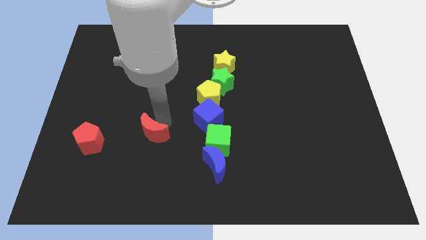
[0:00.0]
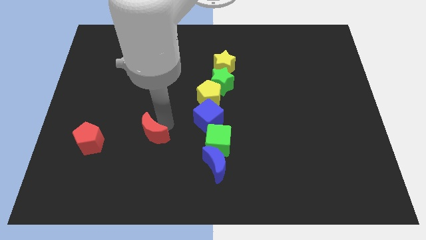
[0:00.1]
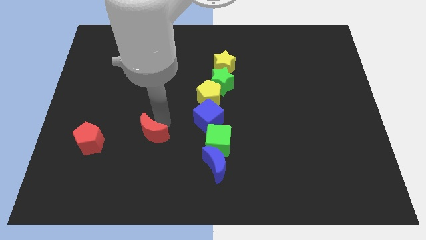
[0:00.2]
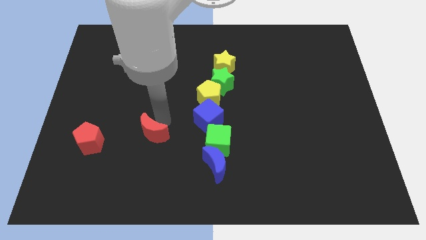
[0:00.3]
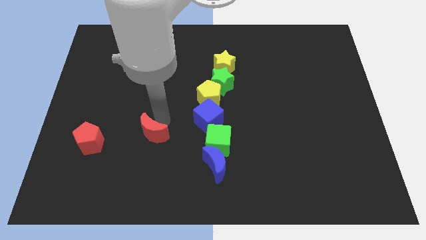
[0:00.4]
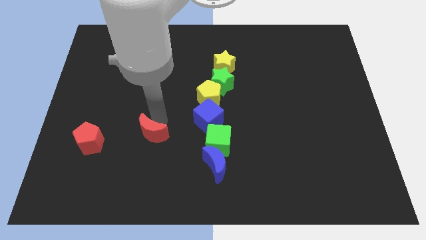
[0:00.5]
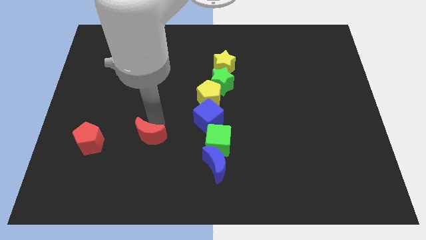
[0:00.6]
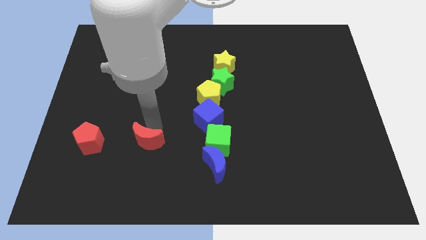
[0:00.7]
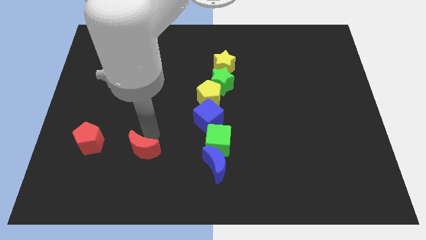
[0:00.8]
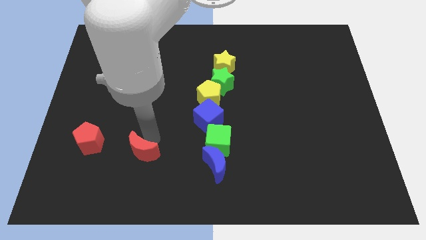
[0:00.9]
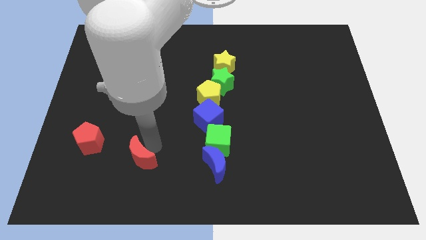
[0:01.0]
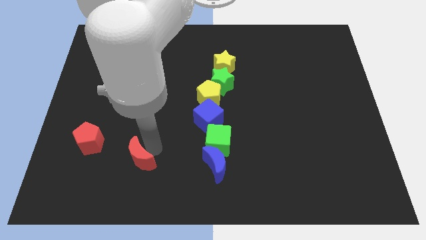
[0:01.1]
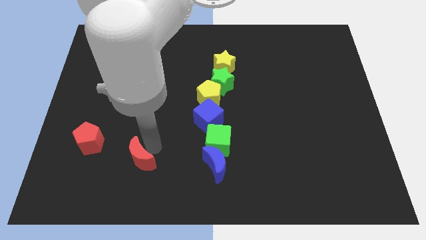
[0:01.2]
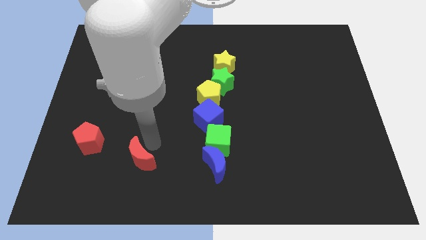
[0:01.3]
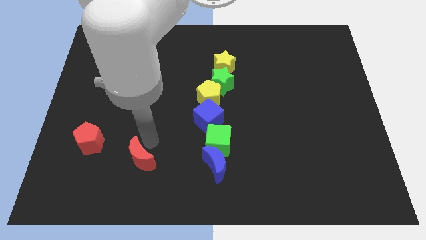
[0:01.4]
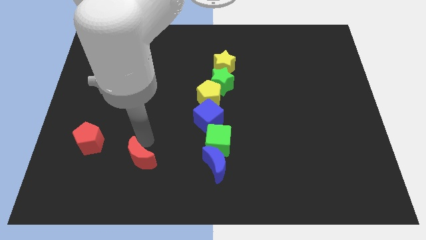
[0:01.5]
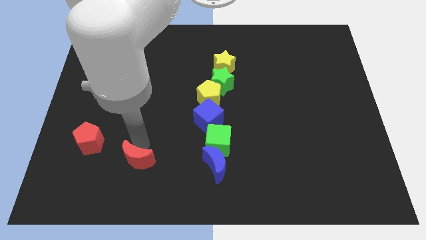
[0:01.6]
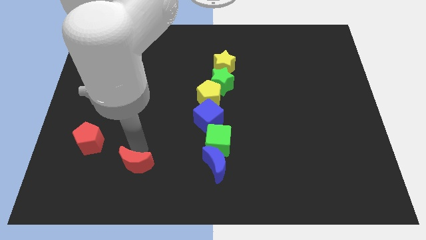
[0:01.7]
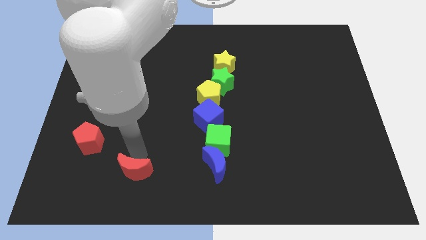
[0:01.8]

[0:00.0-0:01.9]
move the red crescent towards bottom side

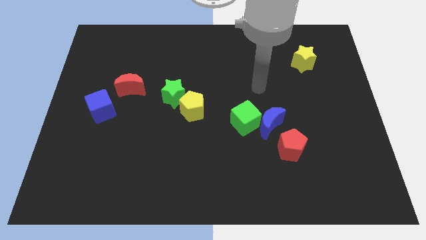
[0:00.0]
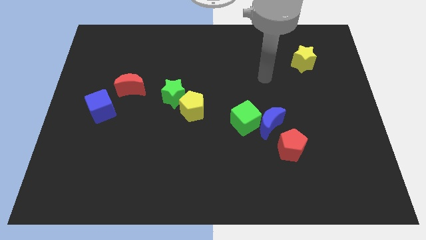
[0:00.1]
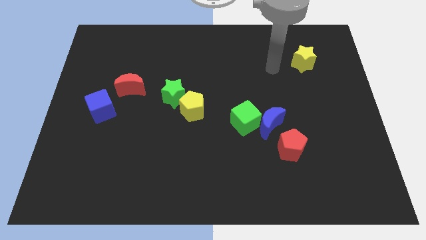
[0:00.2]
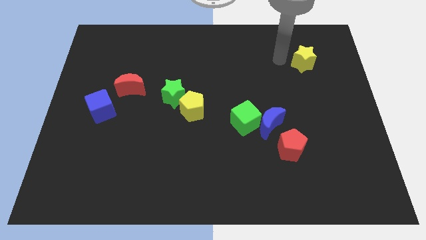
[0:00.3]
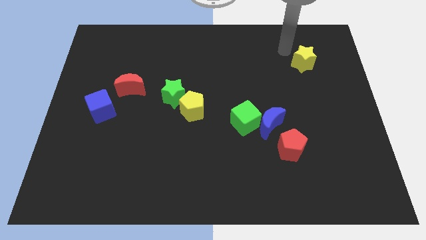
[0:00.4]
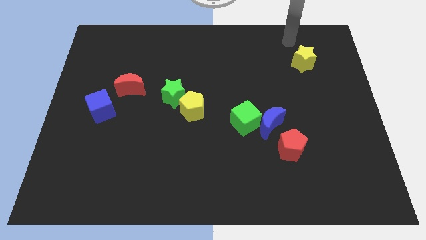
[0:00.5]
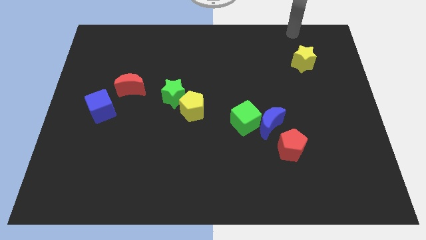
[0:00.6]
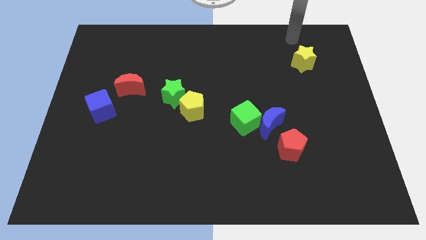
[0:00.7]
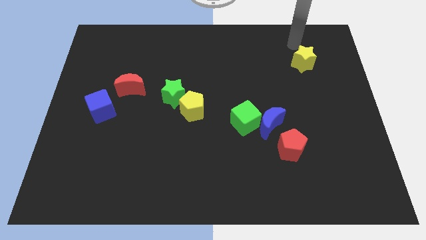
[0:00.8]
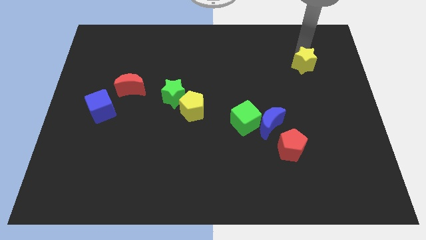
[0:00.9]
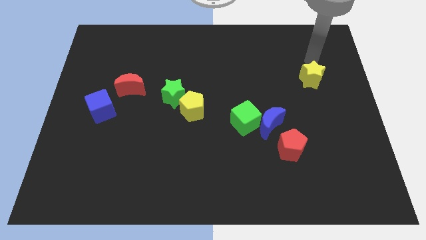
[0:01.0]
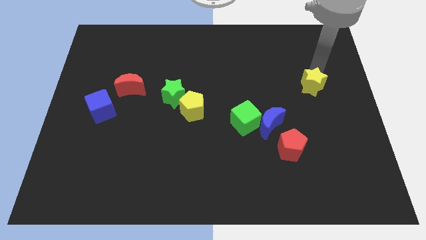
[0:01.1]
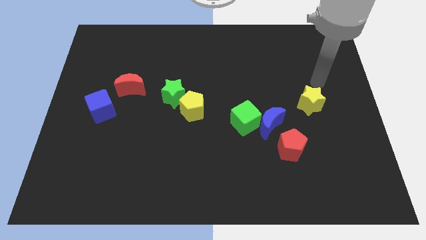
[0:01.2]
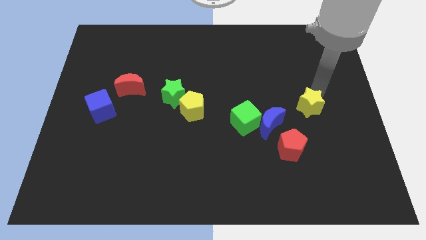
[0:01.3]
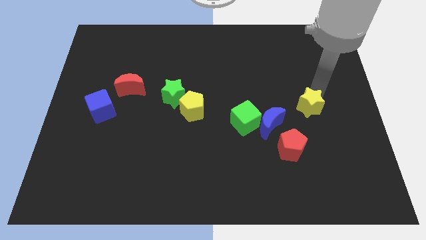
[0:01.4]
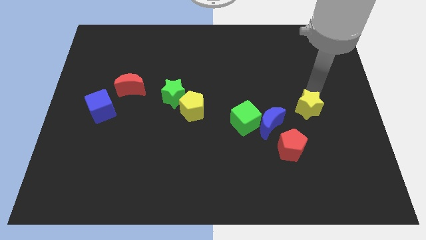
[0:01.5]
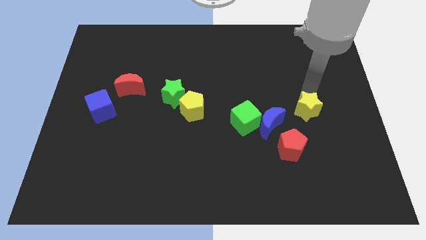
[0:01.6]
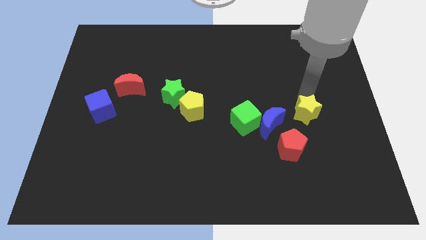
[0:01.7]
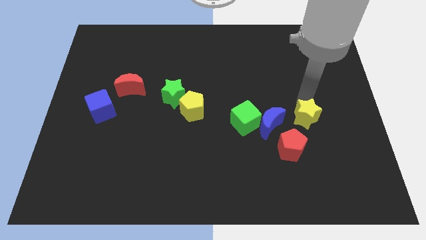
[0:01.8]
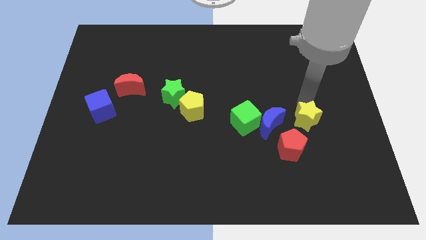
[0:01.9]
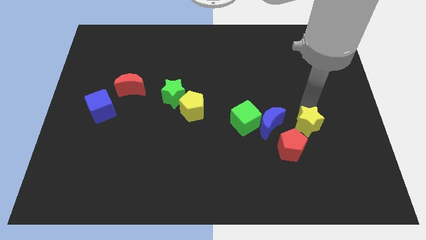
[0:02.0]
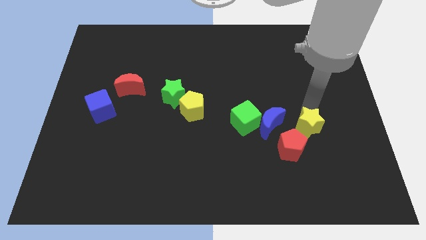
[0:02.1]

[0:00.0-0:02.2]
place yellow star right to the blue crescent

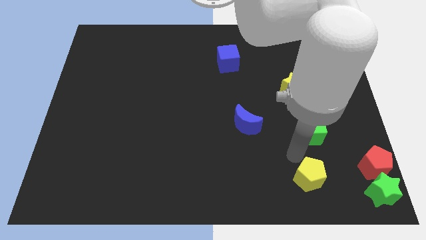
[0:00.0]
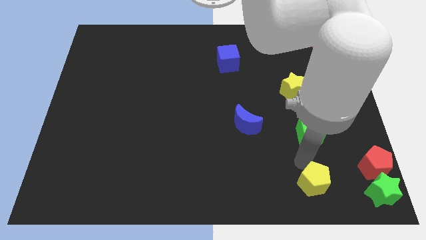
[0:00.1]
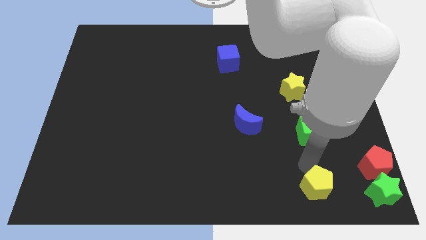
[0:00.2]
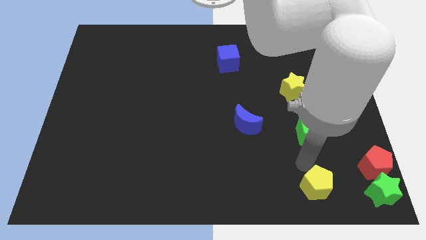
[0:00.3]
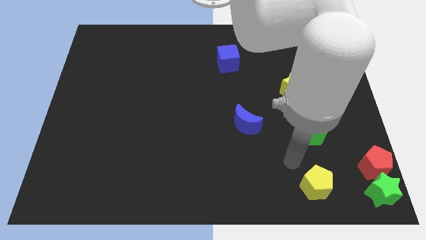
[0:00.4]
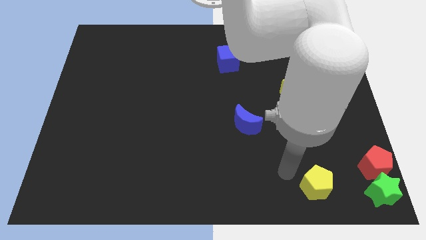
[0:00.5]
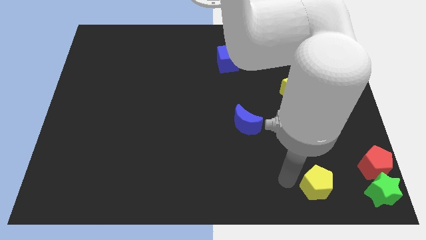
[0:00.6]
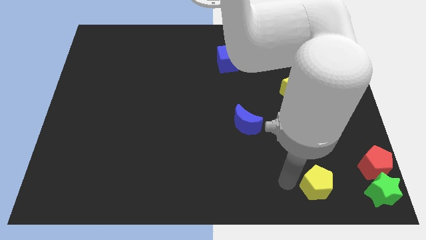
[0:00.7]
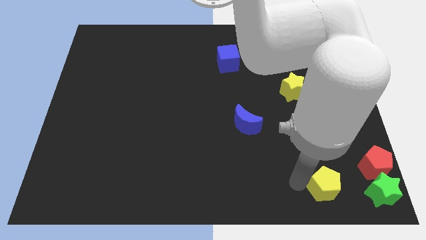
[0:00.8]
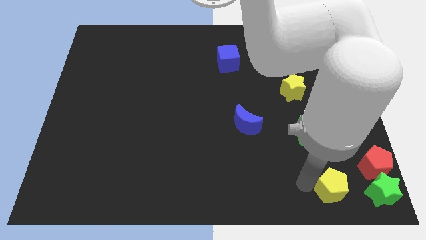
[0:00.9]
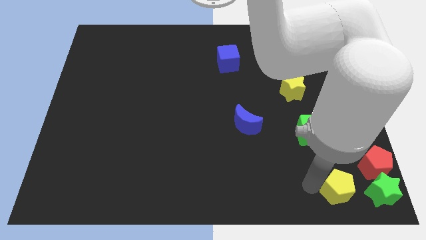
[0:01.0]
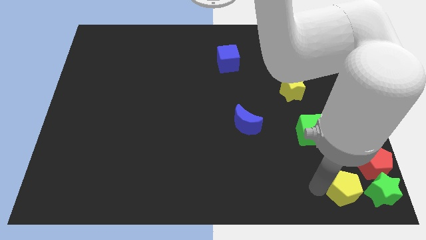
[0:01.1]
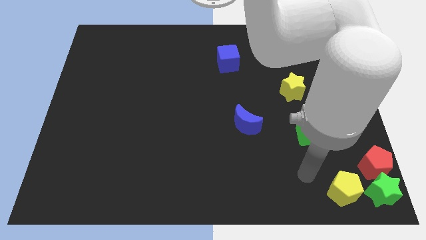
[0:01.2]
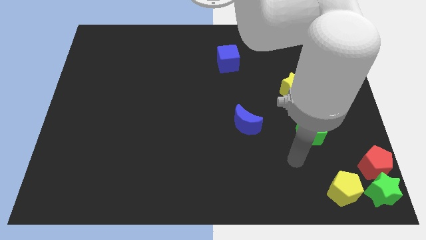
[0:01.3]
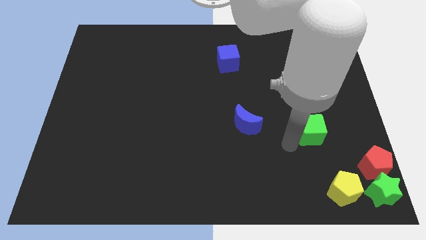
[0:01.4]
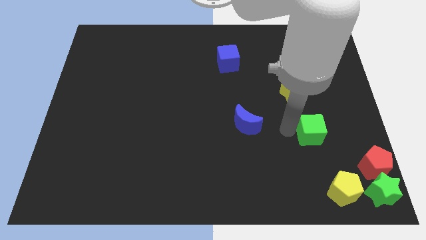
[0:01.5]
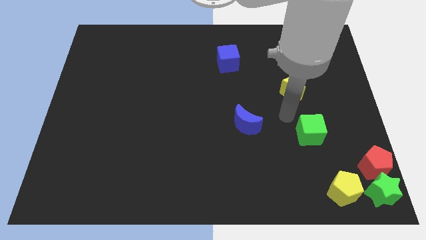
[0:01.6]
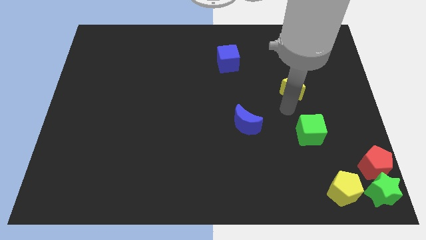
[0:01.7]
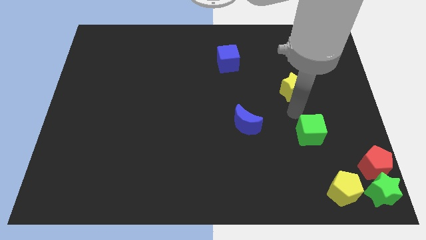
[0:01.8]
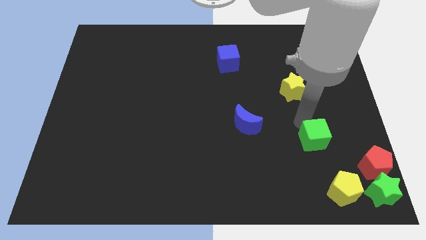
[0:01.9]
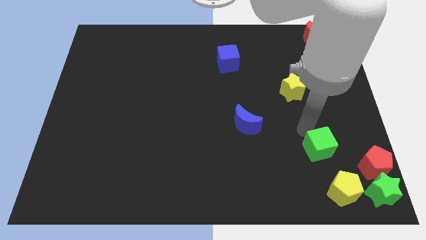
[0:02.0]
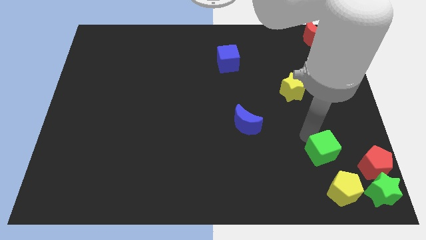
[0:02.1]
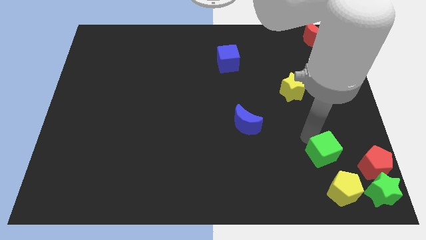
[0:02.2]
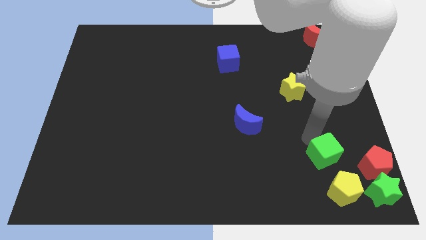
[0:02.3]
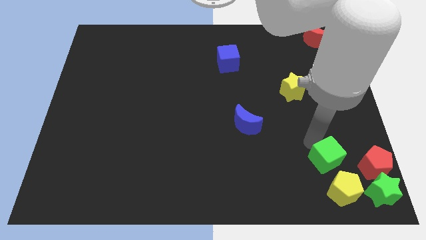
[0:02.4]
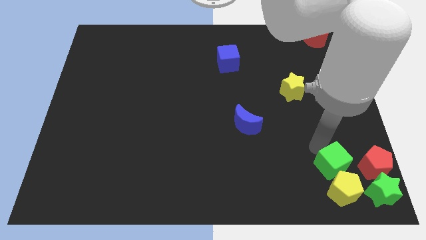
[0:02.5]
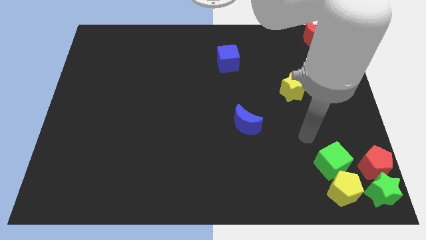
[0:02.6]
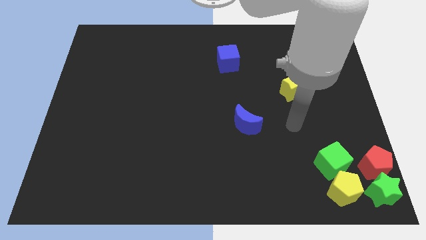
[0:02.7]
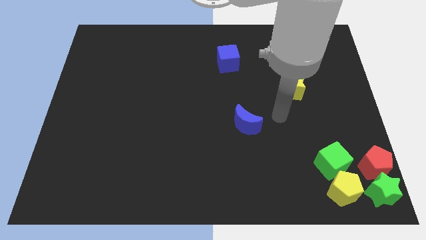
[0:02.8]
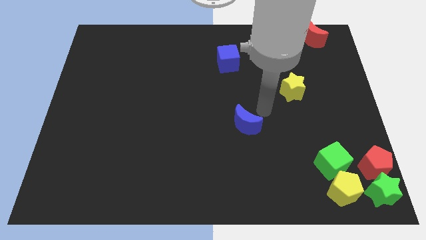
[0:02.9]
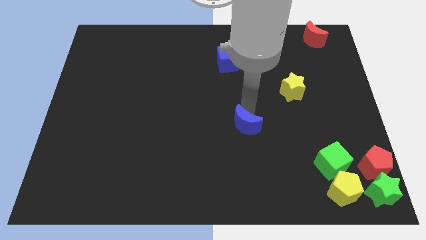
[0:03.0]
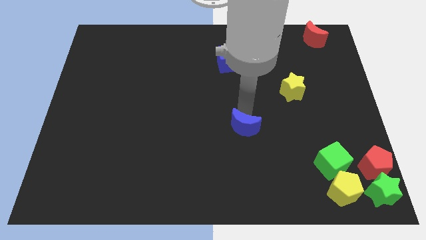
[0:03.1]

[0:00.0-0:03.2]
push the green cube close to the yellow pentagon

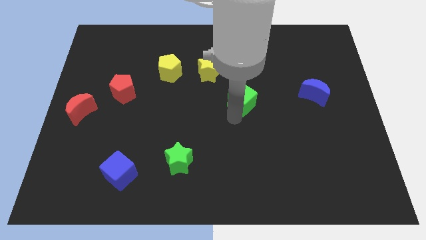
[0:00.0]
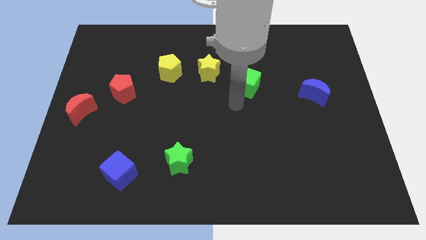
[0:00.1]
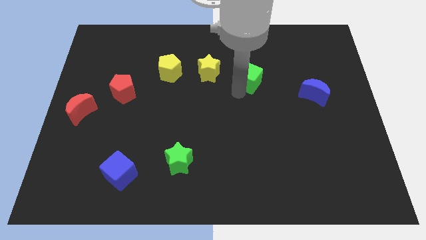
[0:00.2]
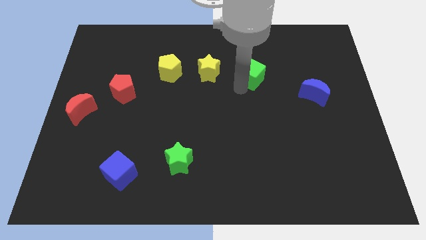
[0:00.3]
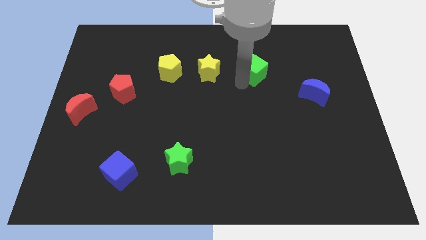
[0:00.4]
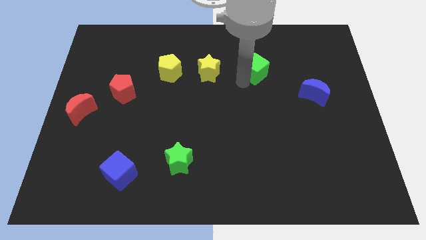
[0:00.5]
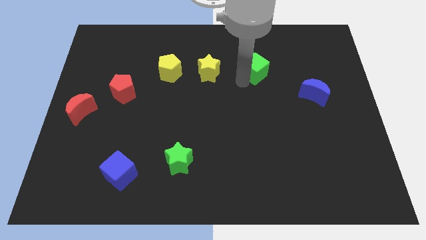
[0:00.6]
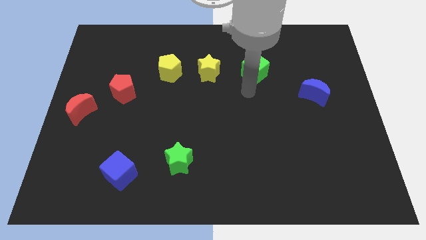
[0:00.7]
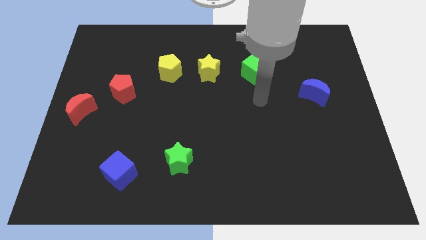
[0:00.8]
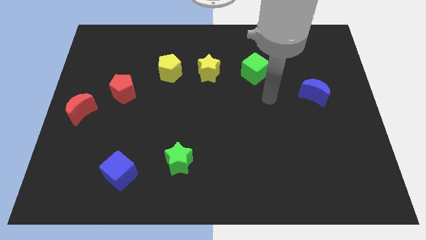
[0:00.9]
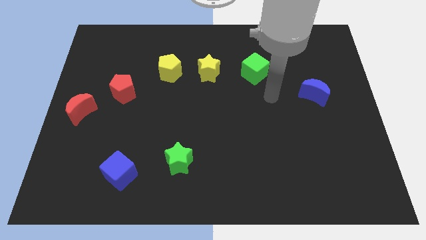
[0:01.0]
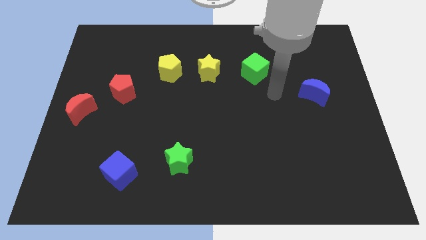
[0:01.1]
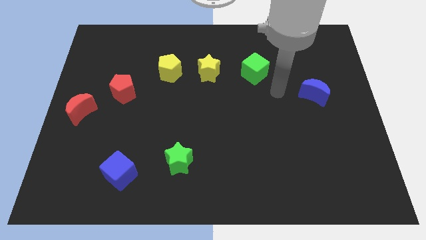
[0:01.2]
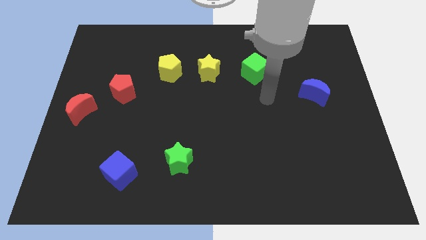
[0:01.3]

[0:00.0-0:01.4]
place the green cube to the right of the yellow star
